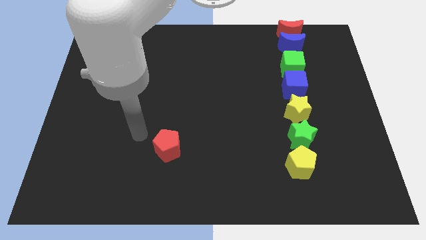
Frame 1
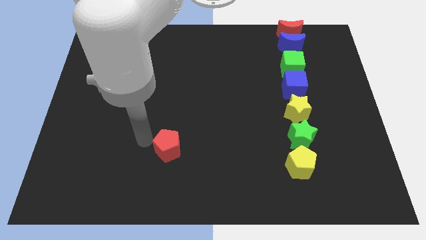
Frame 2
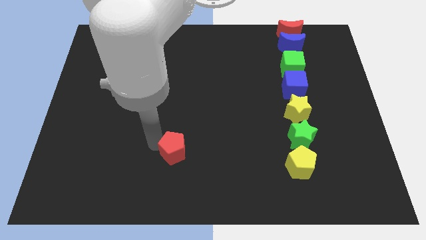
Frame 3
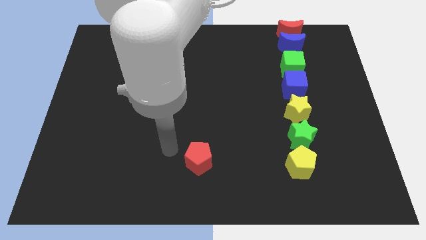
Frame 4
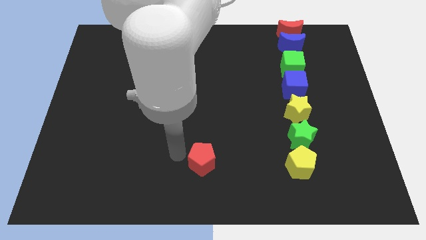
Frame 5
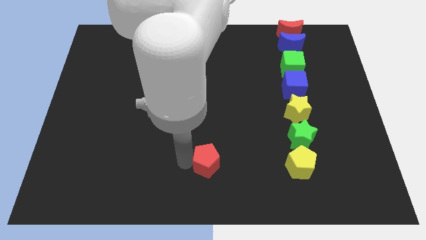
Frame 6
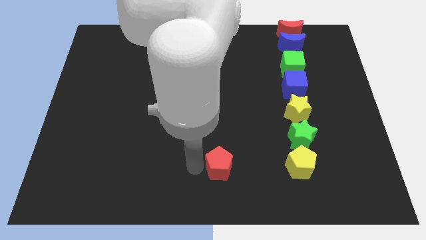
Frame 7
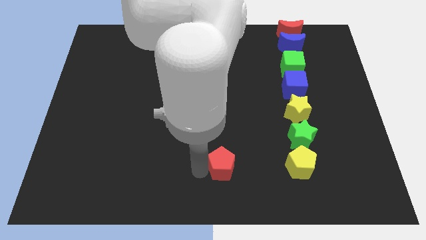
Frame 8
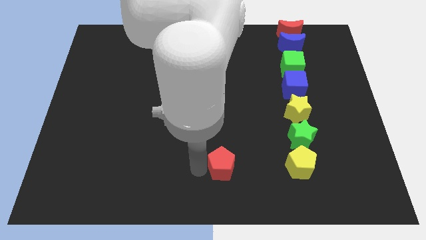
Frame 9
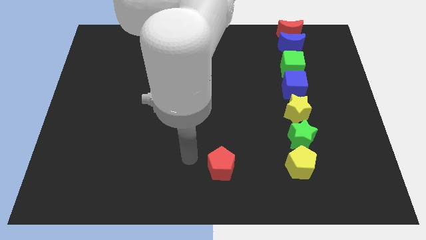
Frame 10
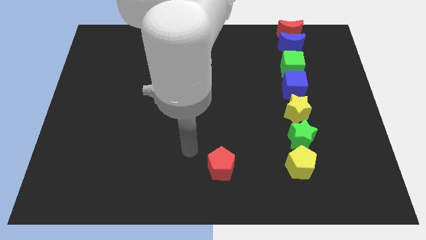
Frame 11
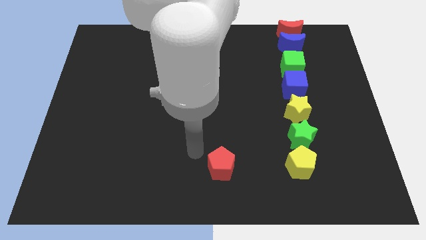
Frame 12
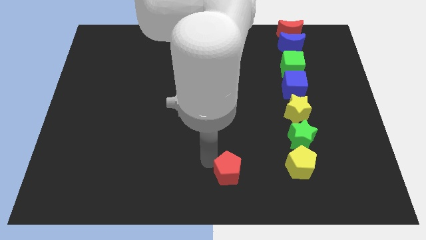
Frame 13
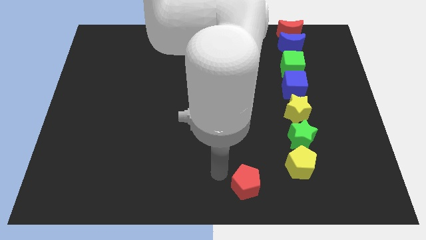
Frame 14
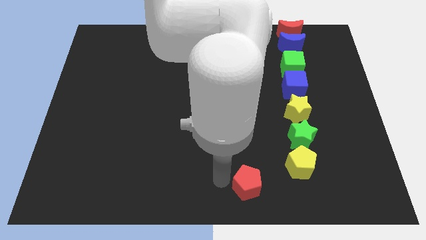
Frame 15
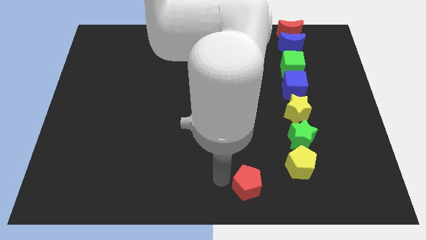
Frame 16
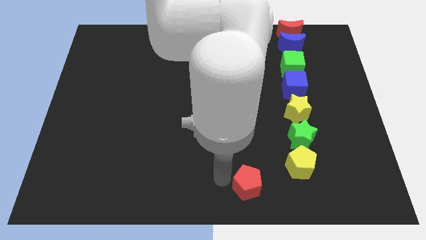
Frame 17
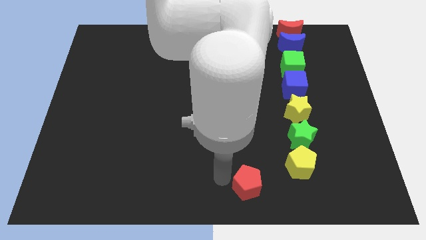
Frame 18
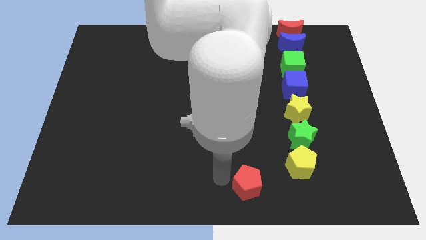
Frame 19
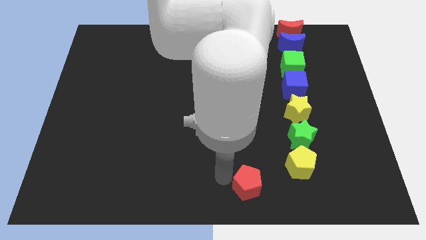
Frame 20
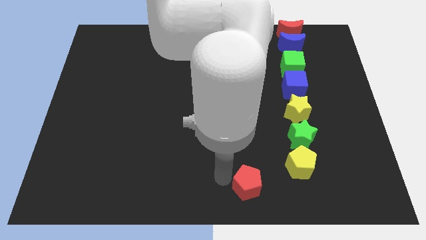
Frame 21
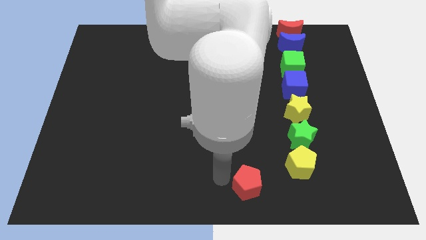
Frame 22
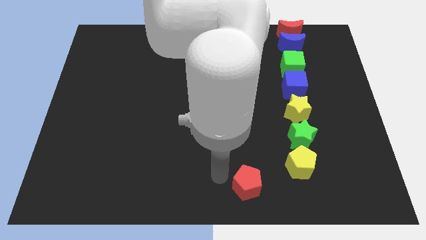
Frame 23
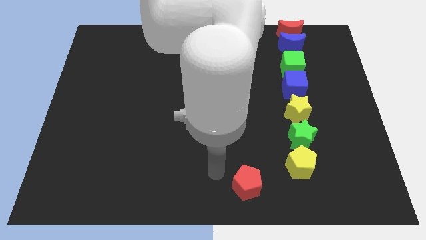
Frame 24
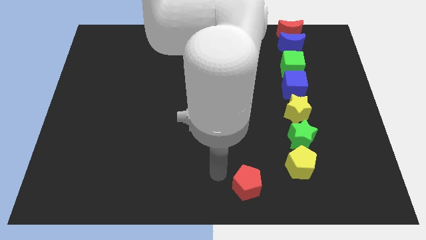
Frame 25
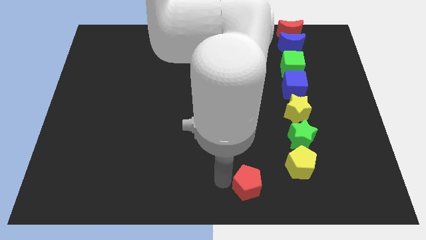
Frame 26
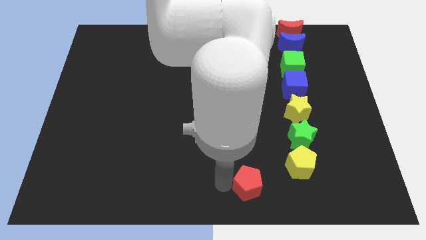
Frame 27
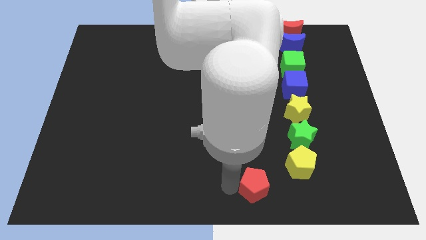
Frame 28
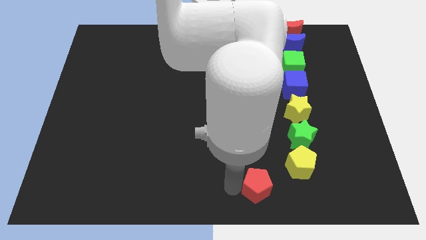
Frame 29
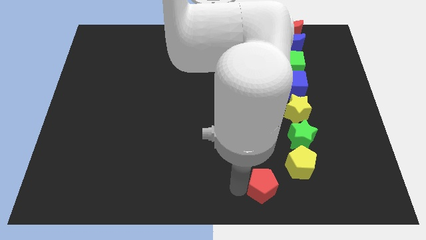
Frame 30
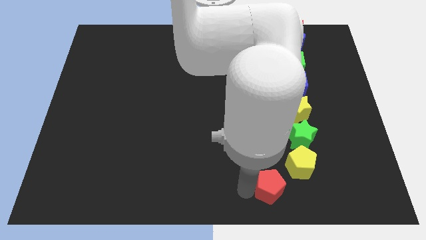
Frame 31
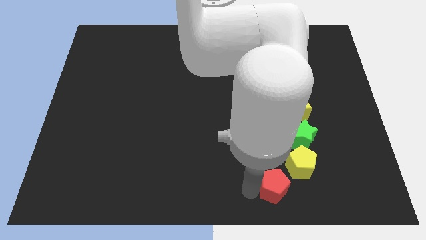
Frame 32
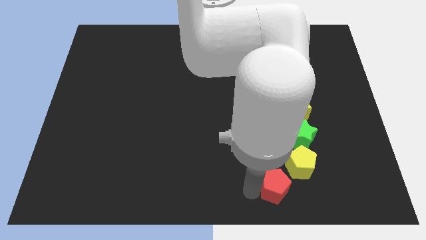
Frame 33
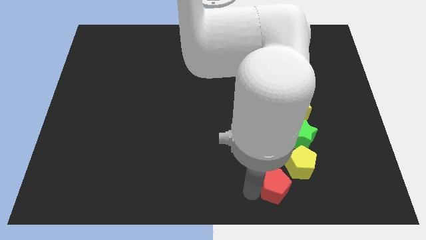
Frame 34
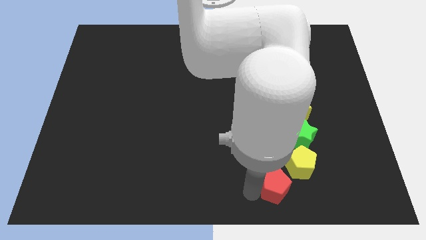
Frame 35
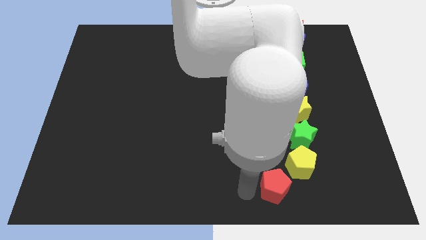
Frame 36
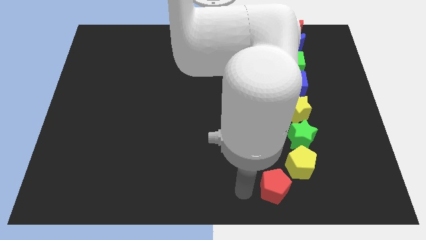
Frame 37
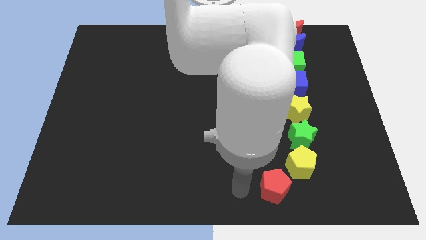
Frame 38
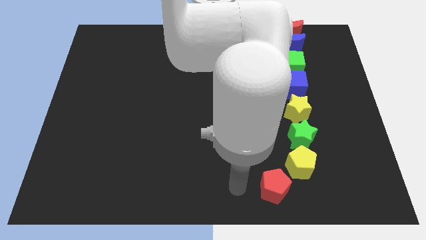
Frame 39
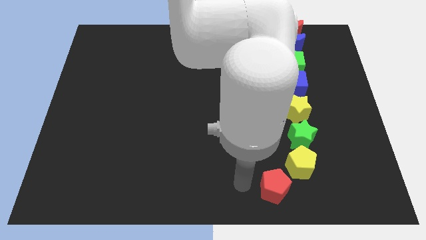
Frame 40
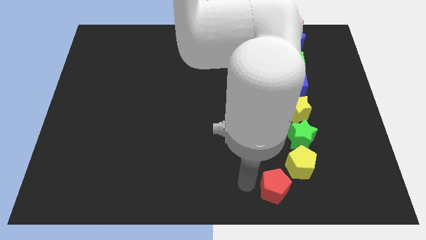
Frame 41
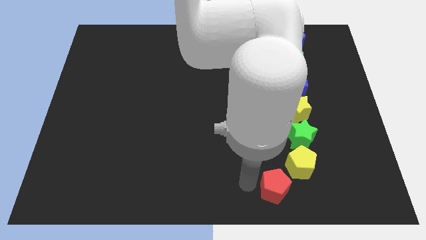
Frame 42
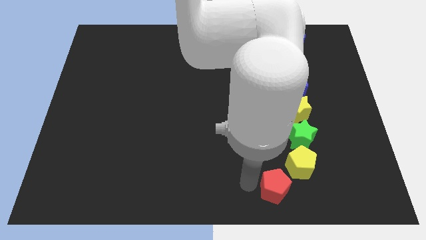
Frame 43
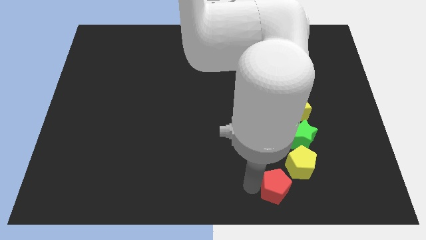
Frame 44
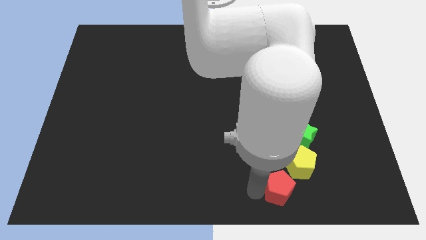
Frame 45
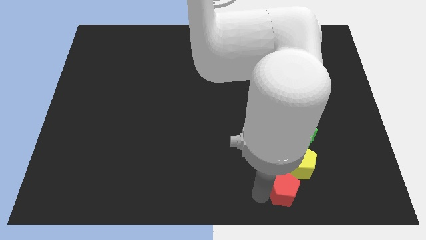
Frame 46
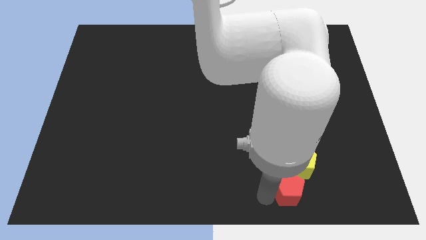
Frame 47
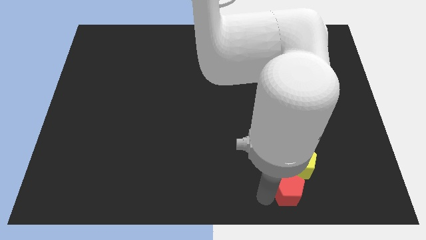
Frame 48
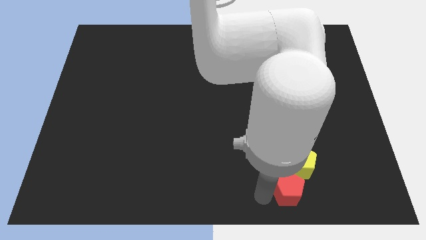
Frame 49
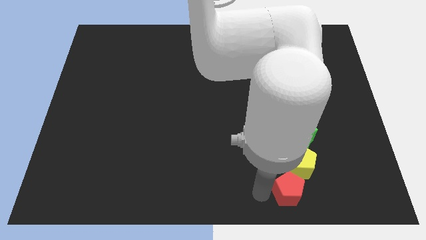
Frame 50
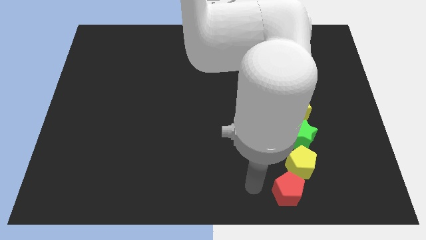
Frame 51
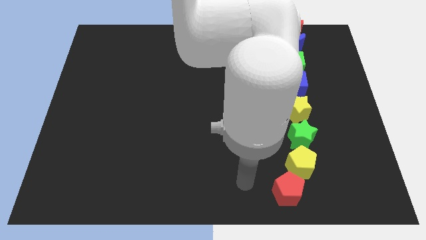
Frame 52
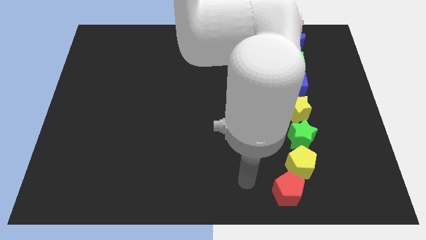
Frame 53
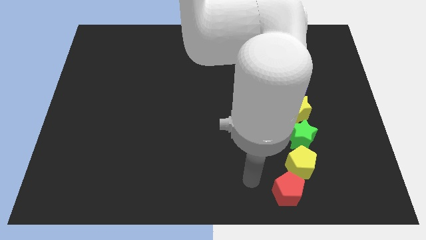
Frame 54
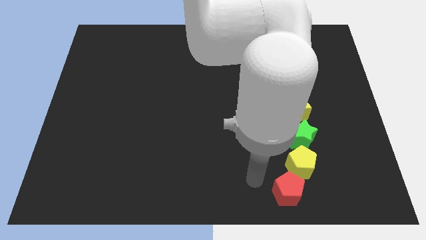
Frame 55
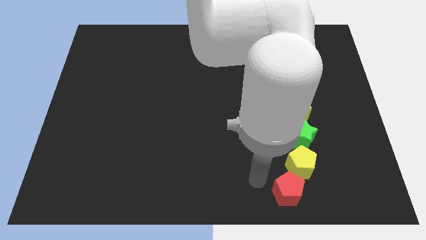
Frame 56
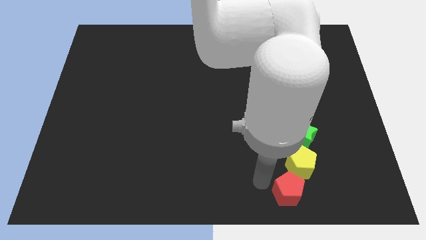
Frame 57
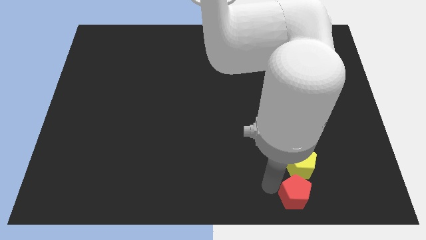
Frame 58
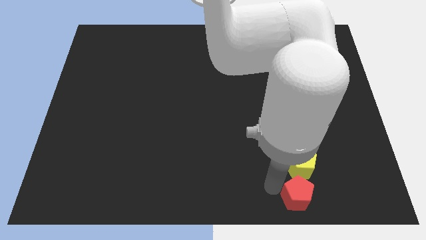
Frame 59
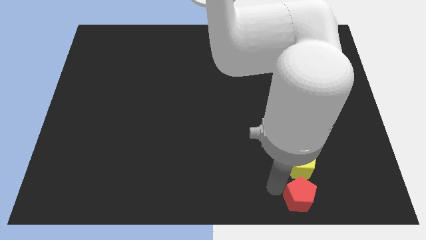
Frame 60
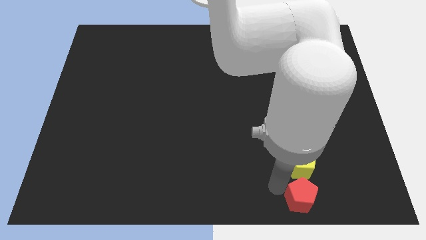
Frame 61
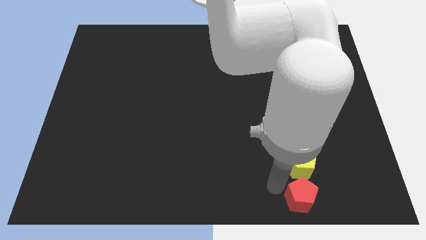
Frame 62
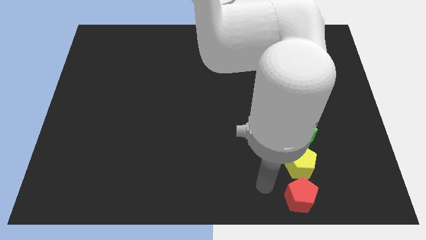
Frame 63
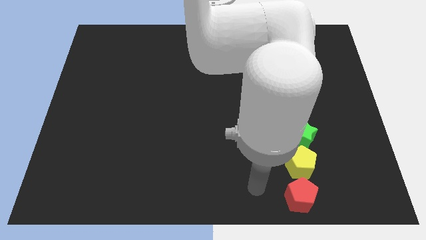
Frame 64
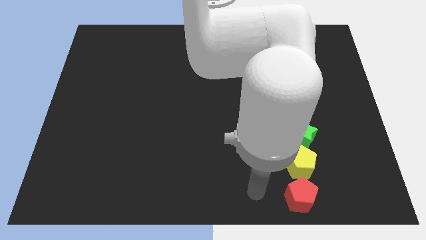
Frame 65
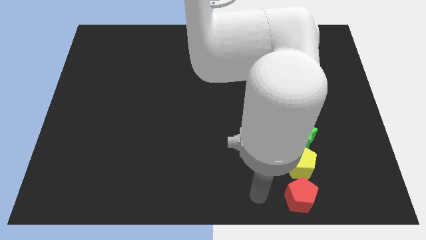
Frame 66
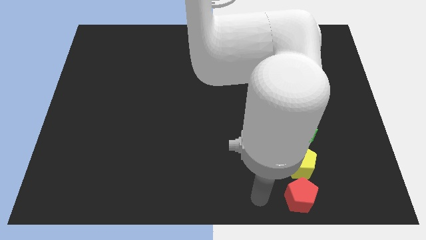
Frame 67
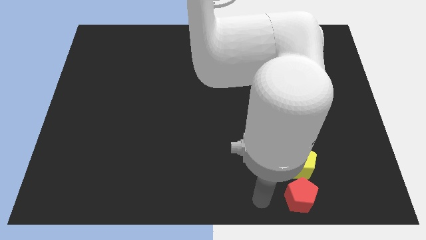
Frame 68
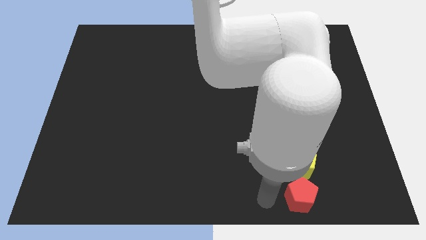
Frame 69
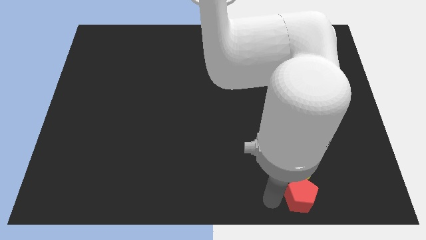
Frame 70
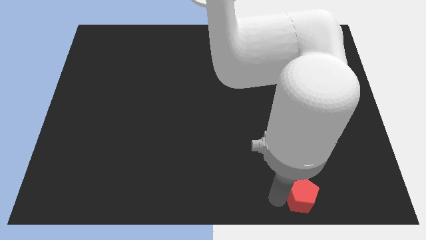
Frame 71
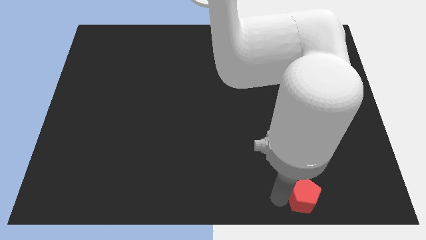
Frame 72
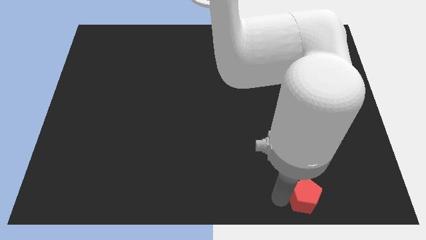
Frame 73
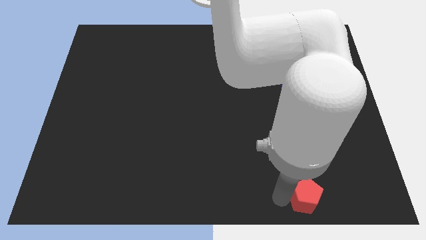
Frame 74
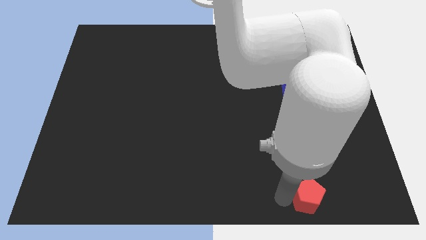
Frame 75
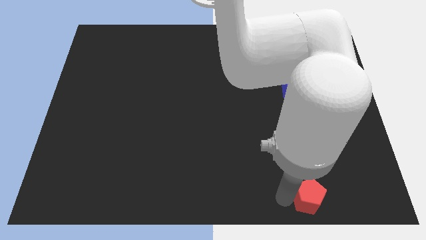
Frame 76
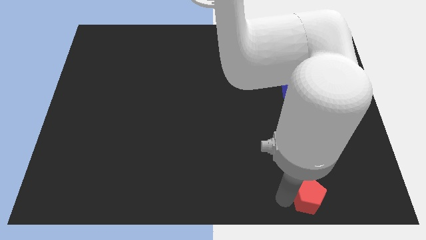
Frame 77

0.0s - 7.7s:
move the red pentagon to the bottom of the yellow pentagon

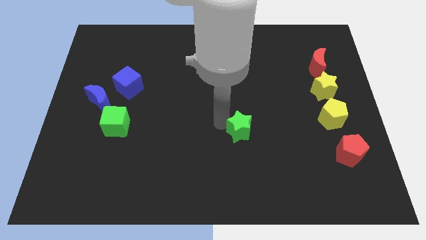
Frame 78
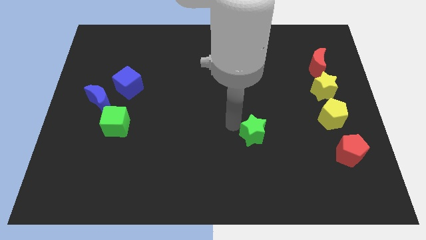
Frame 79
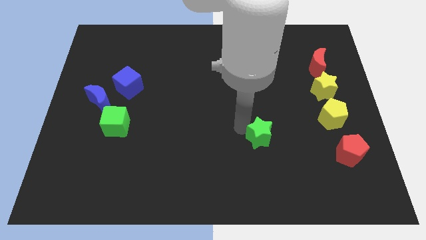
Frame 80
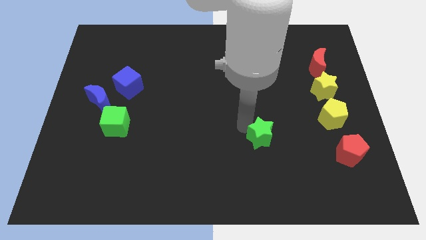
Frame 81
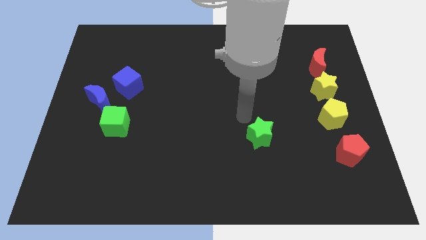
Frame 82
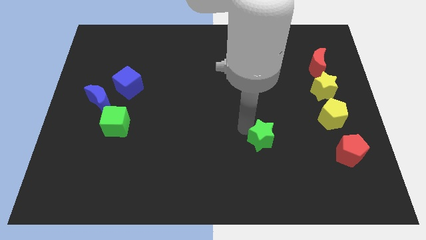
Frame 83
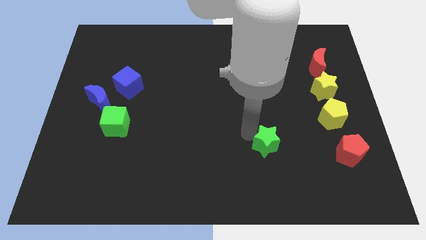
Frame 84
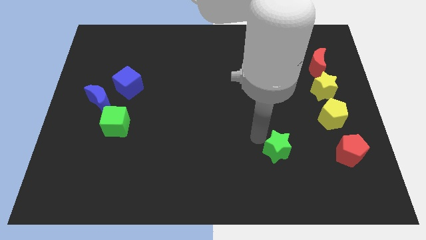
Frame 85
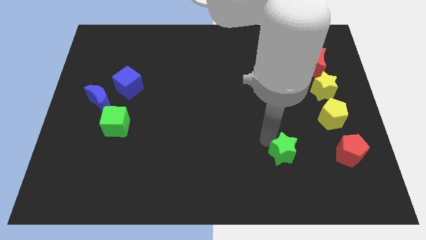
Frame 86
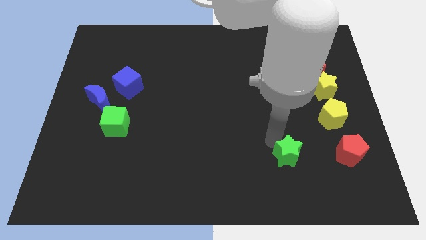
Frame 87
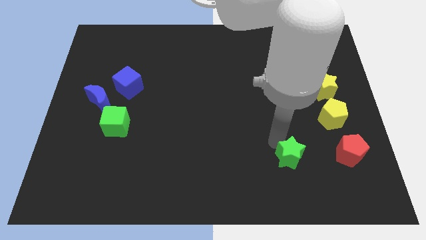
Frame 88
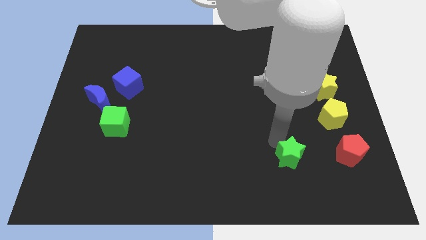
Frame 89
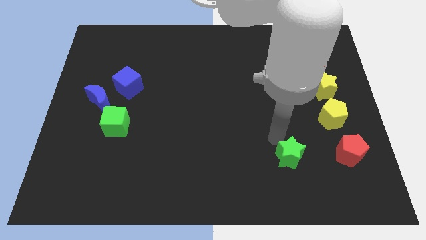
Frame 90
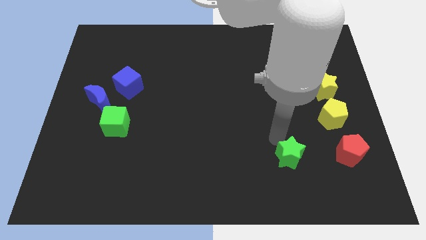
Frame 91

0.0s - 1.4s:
put the green star to the left of the red pentagon

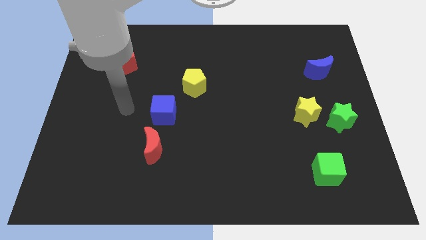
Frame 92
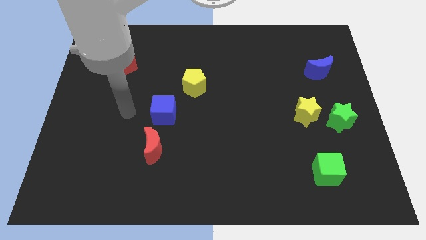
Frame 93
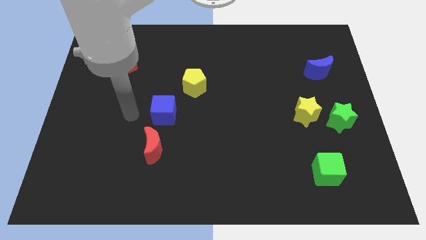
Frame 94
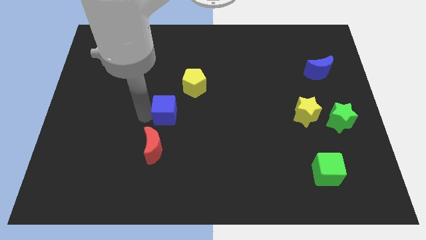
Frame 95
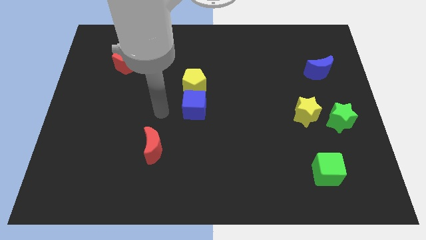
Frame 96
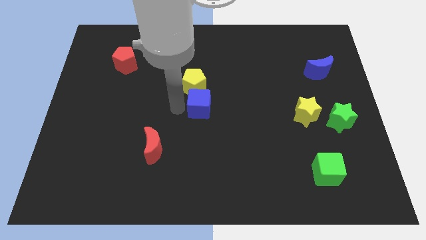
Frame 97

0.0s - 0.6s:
push blue cube below yellow pentagon
